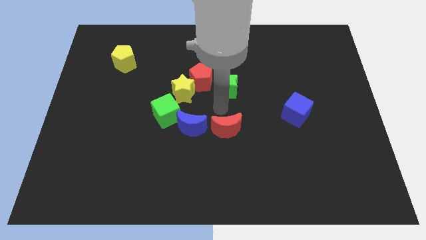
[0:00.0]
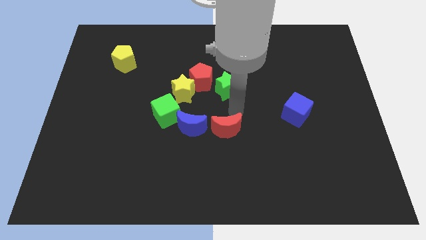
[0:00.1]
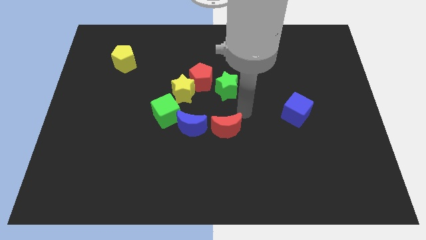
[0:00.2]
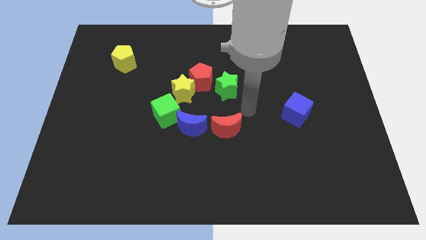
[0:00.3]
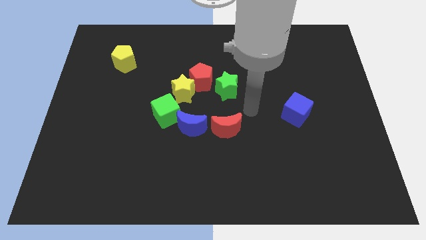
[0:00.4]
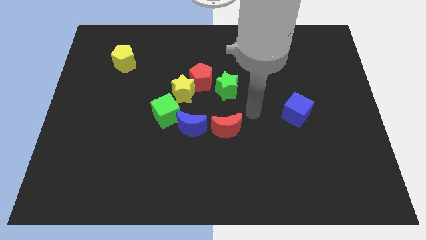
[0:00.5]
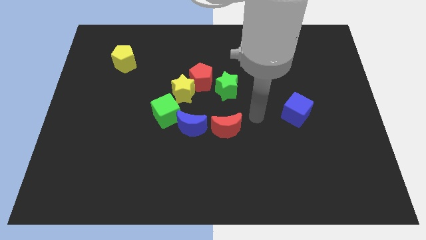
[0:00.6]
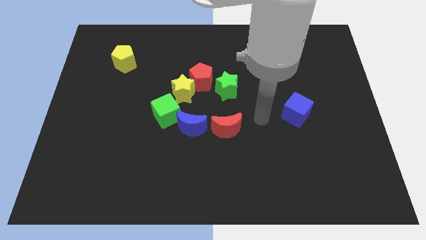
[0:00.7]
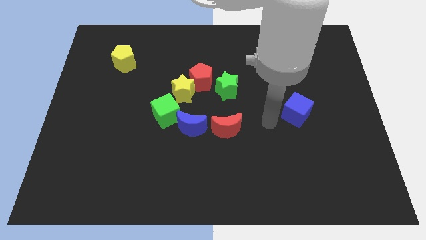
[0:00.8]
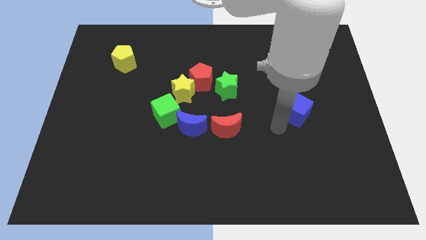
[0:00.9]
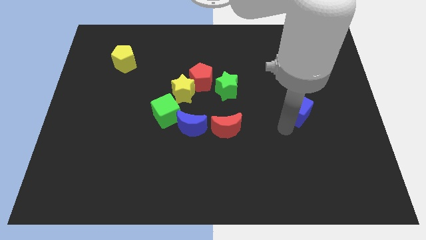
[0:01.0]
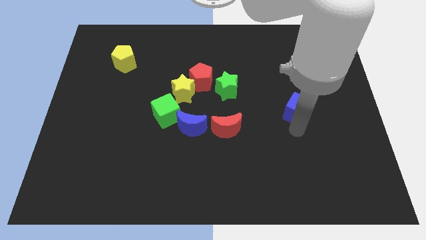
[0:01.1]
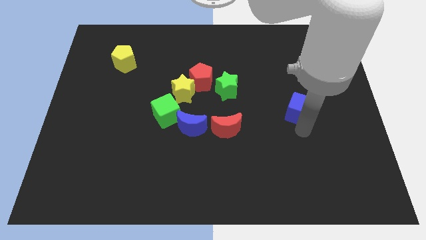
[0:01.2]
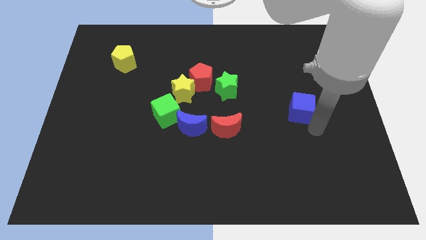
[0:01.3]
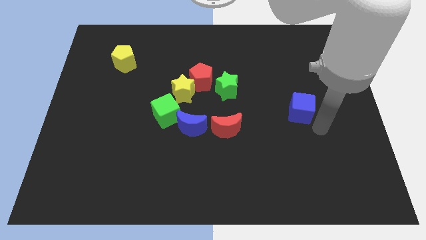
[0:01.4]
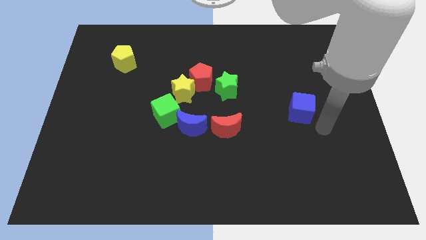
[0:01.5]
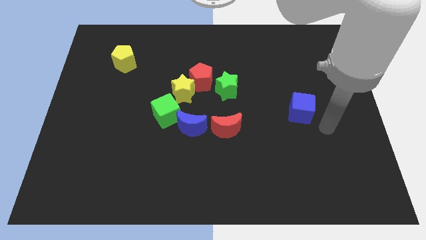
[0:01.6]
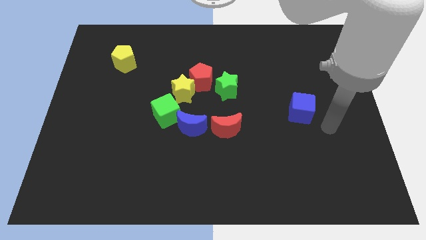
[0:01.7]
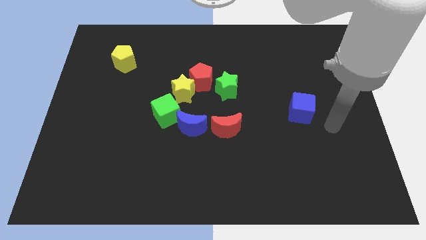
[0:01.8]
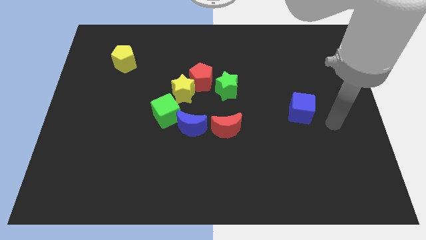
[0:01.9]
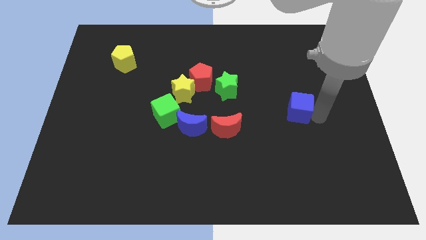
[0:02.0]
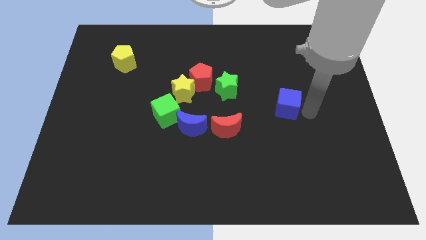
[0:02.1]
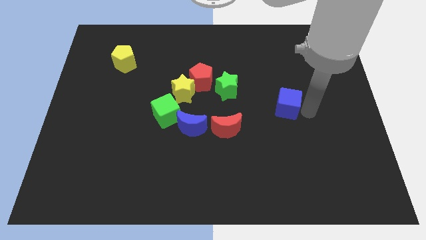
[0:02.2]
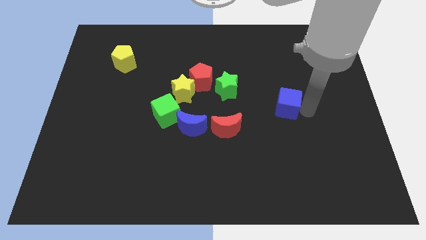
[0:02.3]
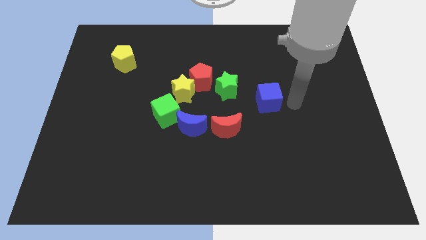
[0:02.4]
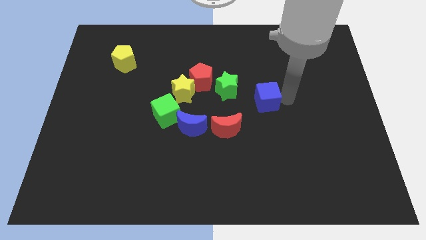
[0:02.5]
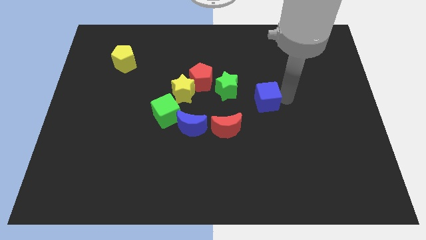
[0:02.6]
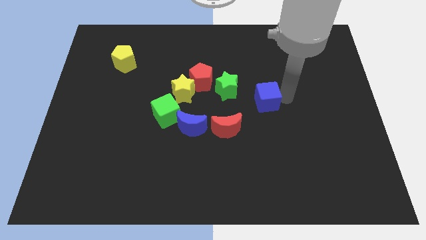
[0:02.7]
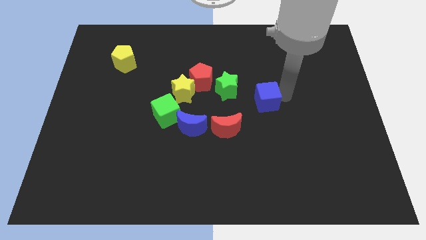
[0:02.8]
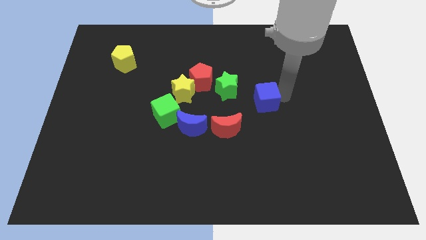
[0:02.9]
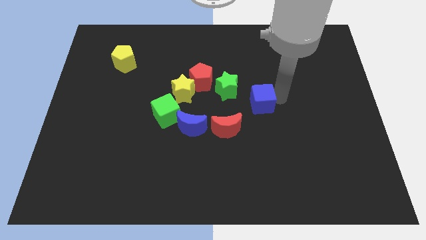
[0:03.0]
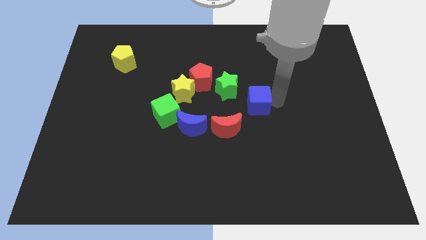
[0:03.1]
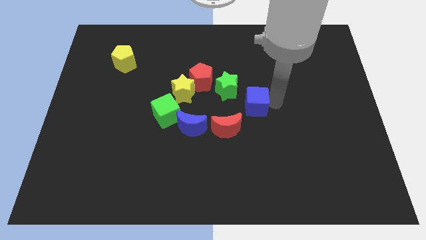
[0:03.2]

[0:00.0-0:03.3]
place the blue cube parallel to green cube

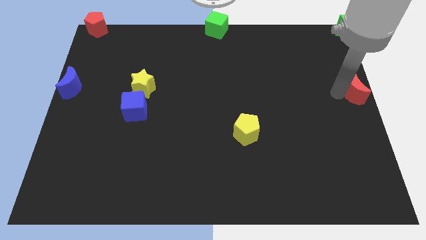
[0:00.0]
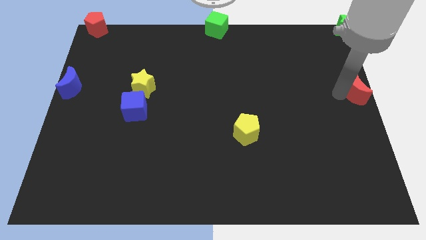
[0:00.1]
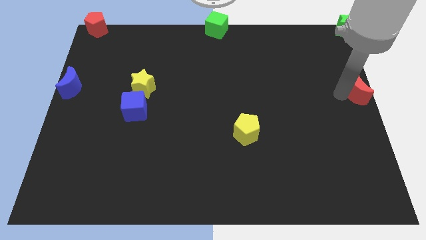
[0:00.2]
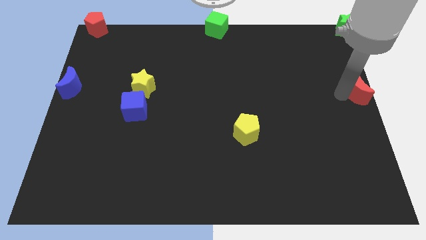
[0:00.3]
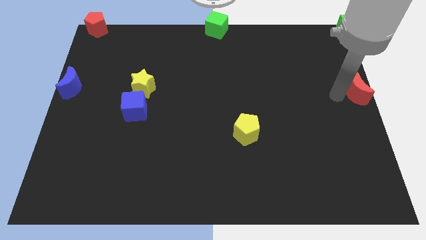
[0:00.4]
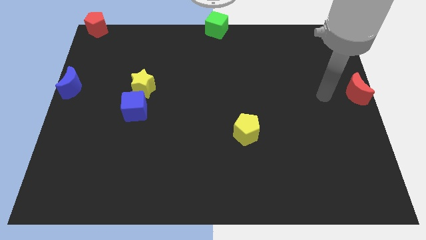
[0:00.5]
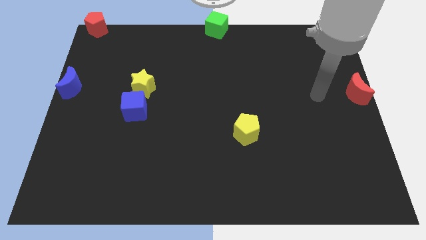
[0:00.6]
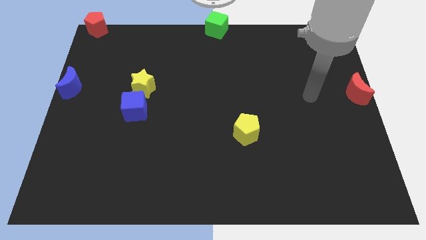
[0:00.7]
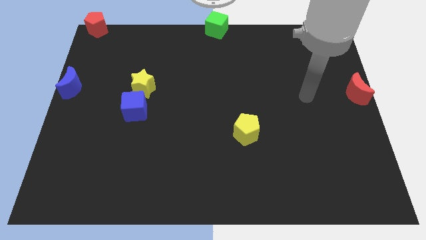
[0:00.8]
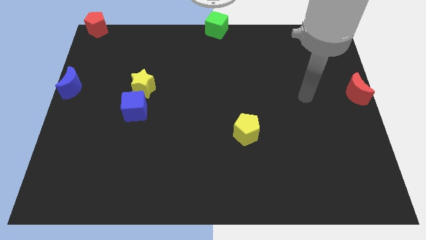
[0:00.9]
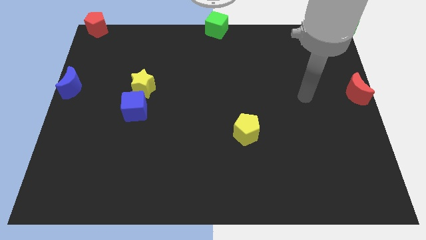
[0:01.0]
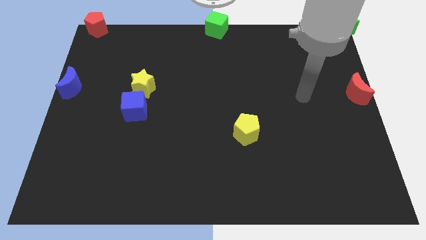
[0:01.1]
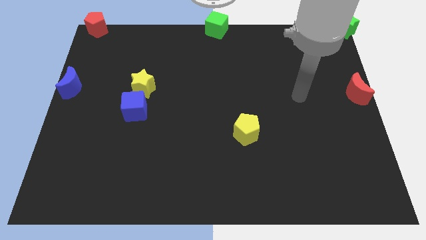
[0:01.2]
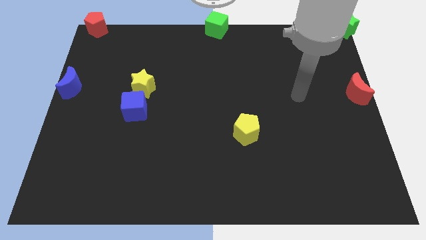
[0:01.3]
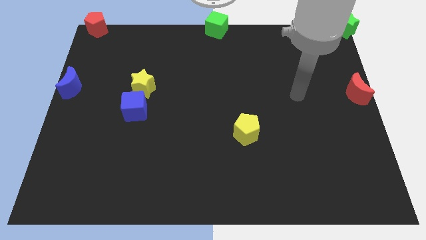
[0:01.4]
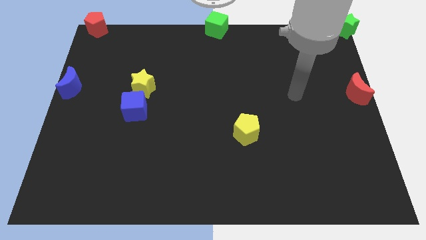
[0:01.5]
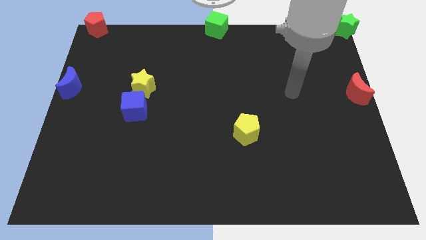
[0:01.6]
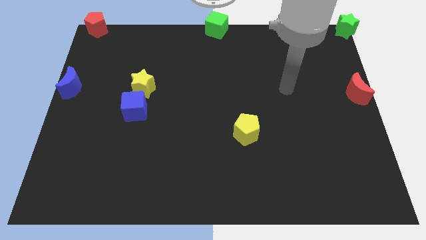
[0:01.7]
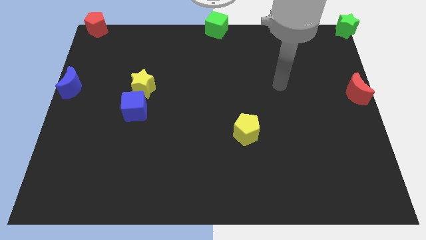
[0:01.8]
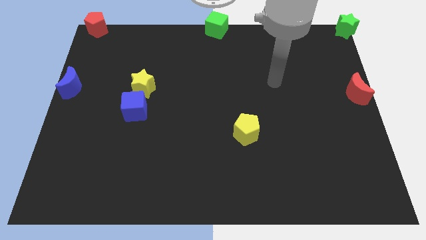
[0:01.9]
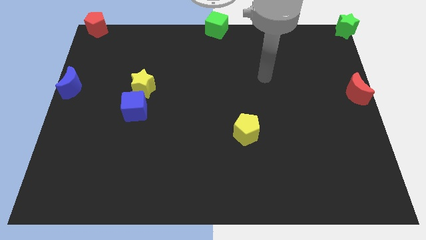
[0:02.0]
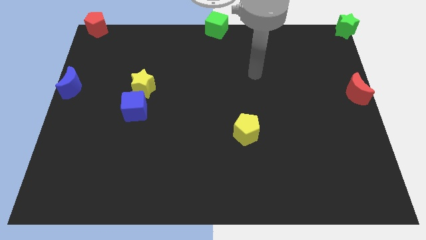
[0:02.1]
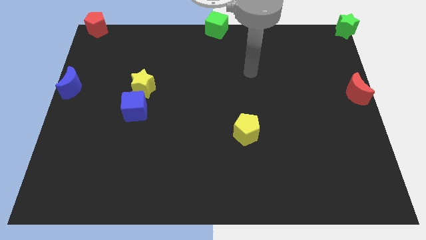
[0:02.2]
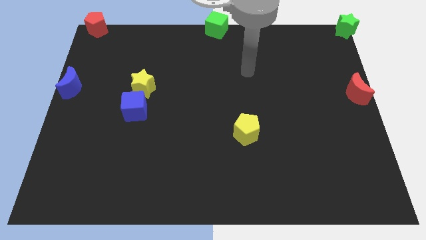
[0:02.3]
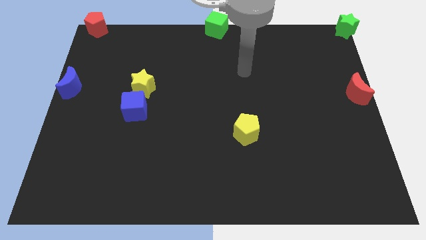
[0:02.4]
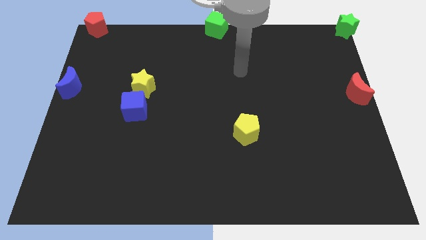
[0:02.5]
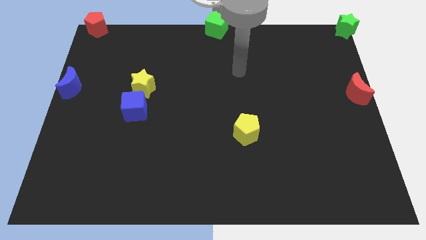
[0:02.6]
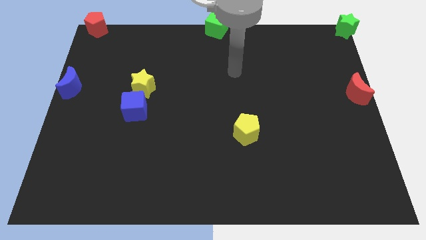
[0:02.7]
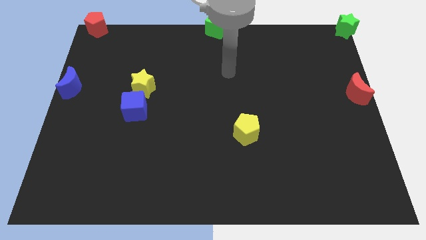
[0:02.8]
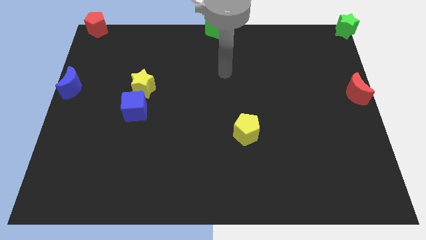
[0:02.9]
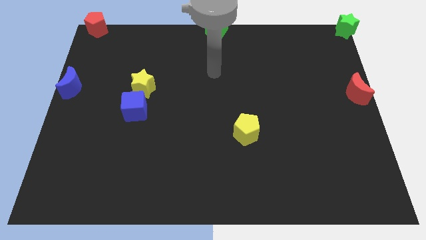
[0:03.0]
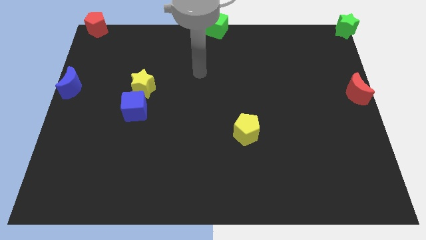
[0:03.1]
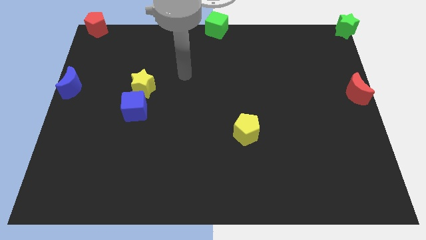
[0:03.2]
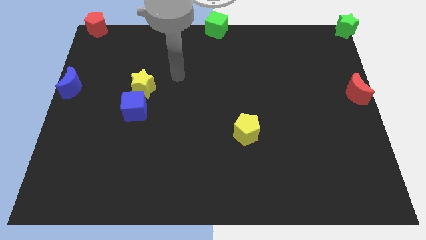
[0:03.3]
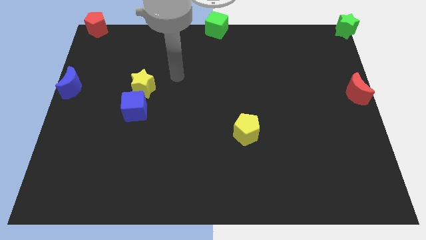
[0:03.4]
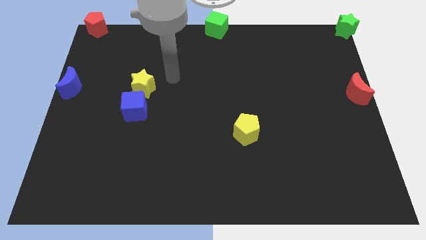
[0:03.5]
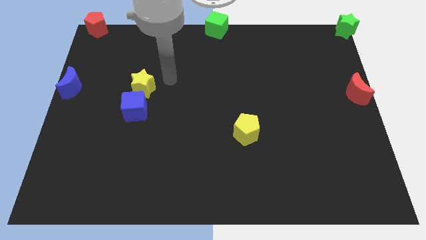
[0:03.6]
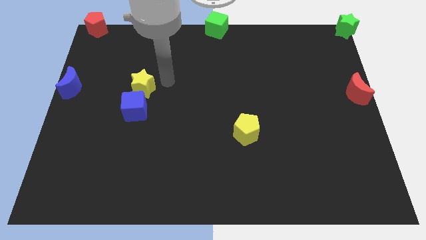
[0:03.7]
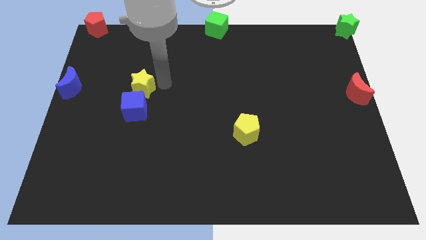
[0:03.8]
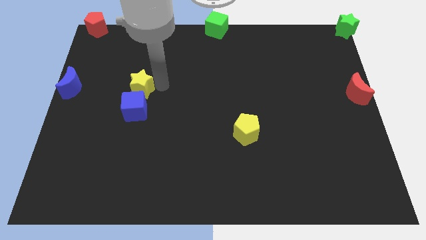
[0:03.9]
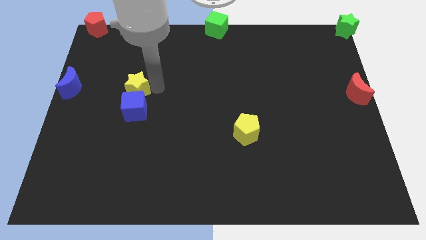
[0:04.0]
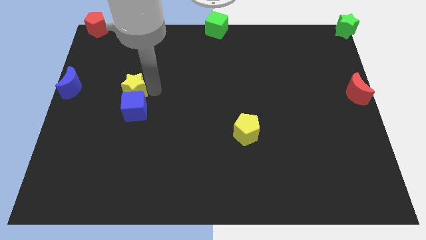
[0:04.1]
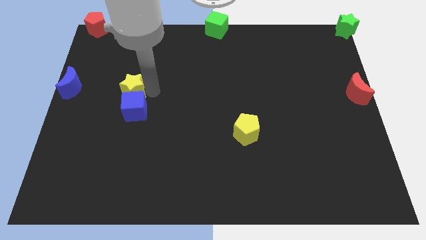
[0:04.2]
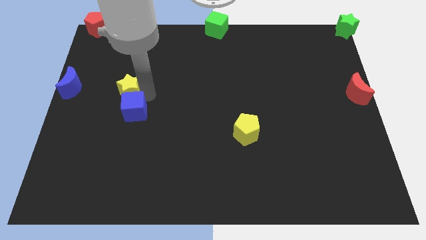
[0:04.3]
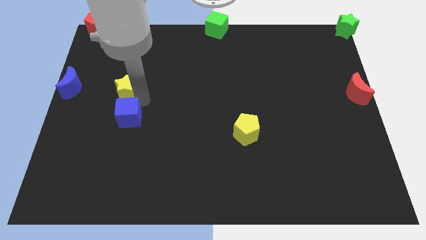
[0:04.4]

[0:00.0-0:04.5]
move the arm away from the red moon

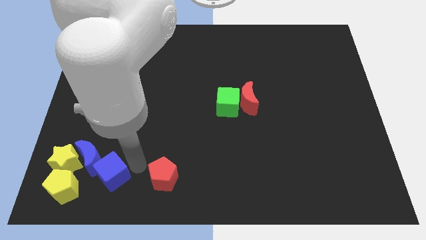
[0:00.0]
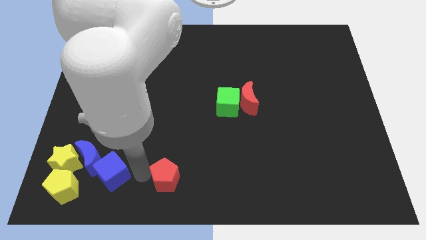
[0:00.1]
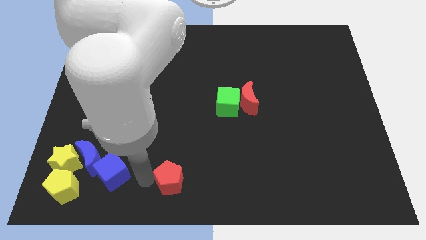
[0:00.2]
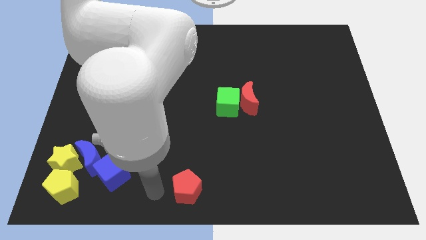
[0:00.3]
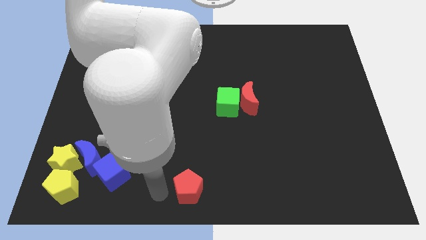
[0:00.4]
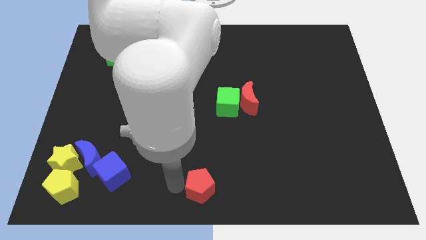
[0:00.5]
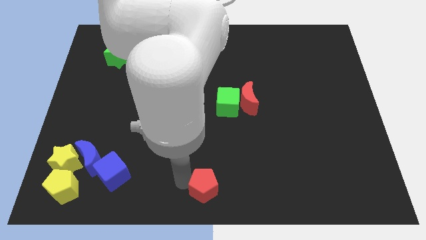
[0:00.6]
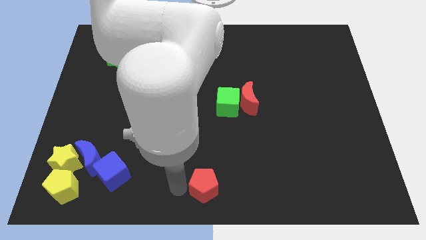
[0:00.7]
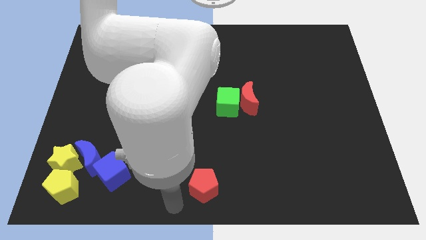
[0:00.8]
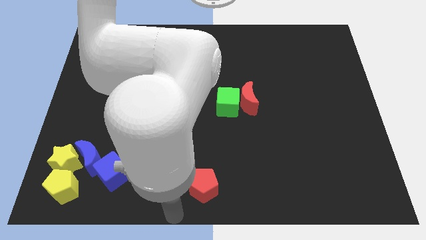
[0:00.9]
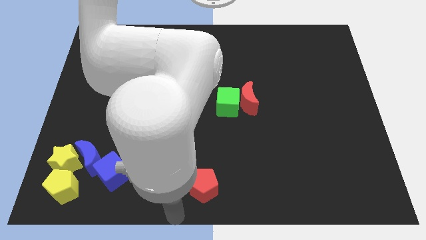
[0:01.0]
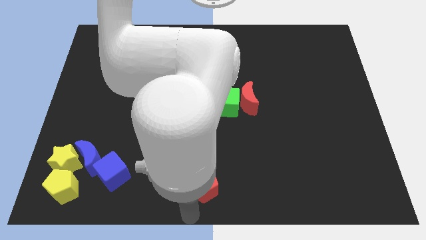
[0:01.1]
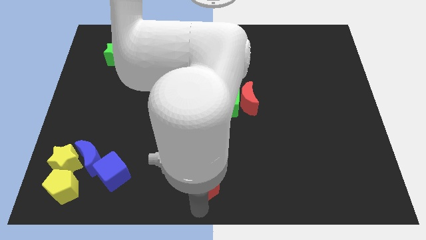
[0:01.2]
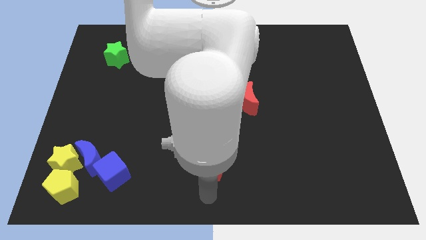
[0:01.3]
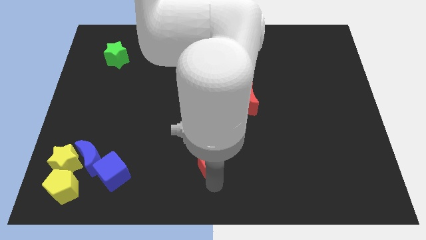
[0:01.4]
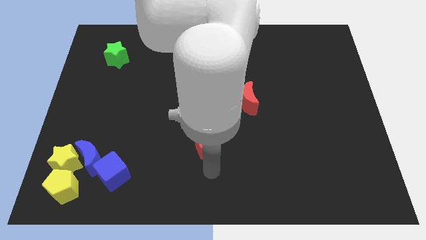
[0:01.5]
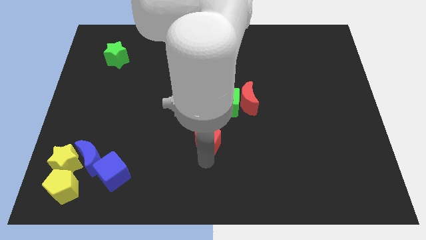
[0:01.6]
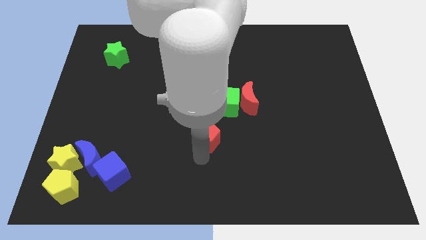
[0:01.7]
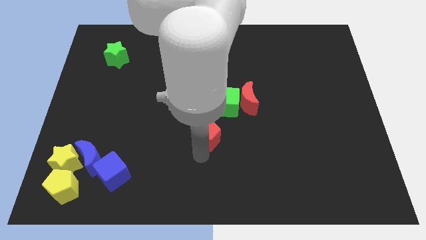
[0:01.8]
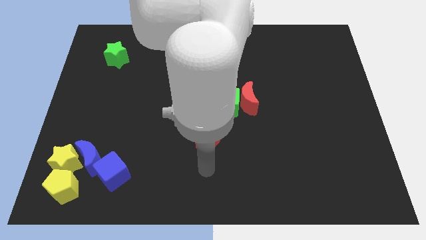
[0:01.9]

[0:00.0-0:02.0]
push the red pentagon towards the center of the board
